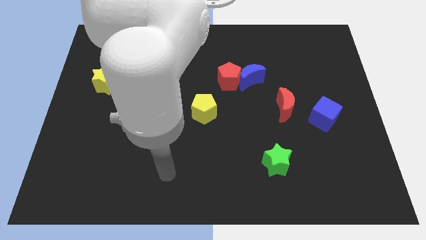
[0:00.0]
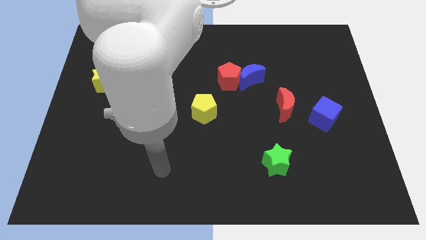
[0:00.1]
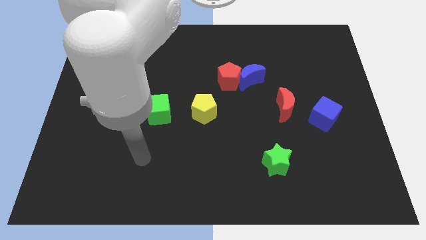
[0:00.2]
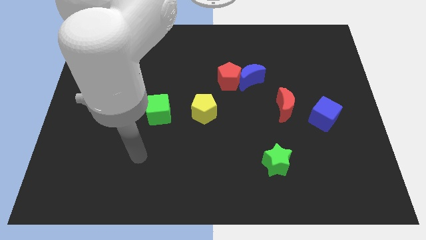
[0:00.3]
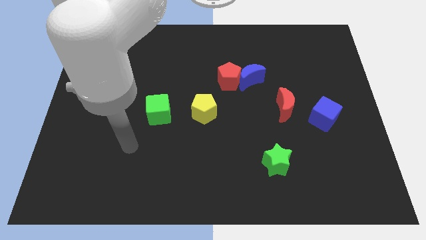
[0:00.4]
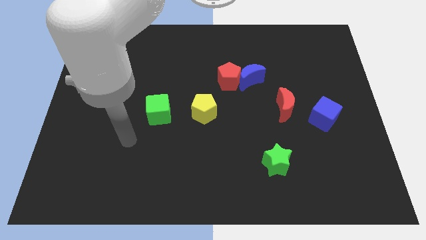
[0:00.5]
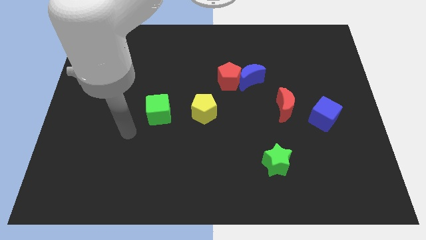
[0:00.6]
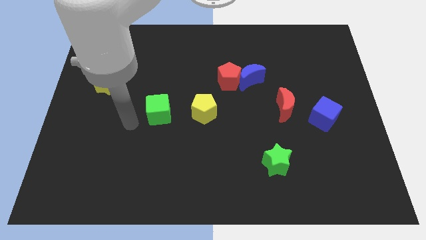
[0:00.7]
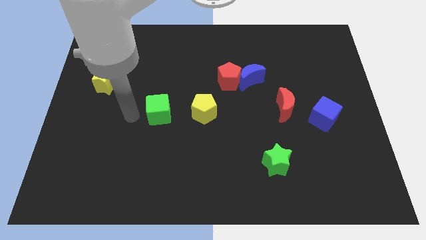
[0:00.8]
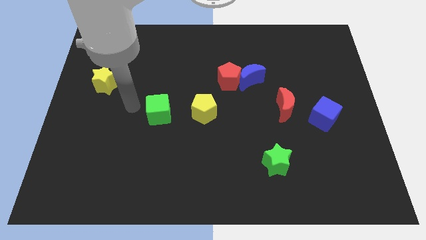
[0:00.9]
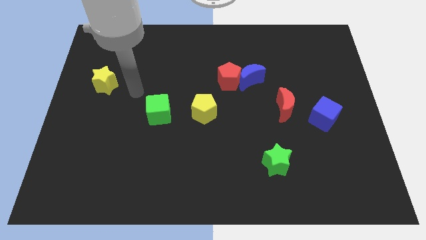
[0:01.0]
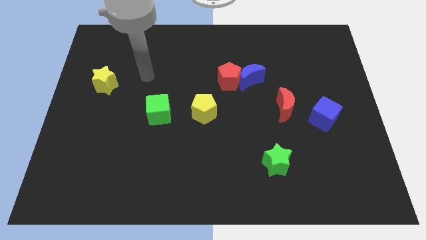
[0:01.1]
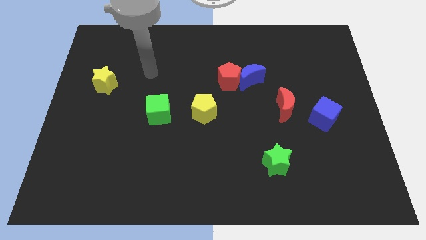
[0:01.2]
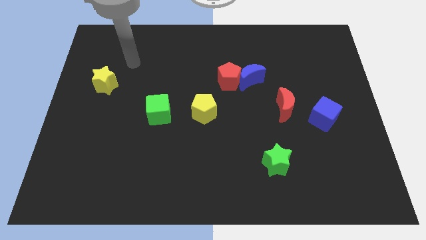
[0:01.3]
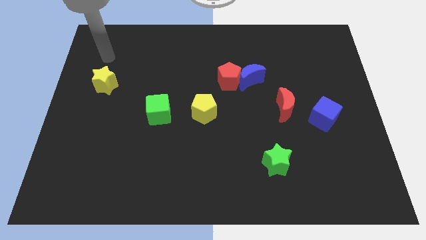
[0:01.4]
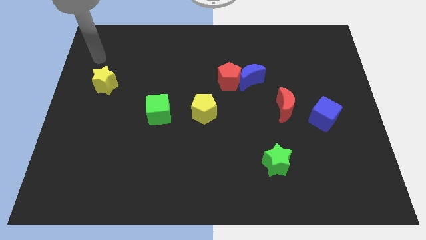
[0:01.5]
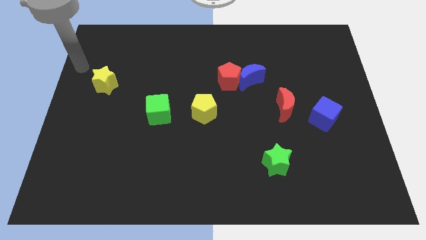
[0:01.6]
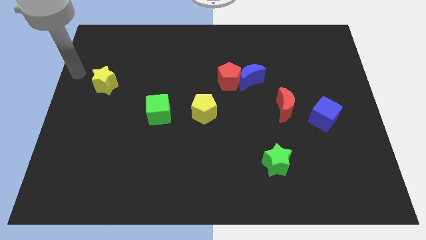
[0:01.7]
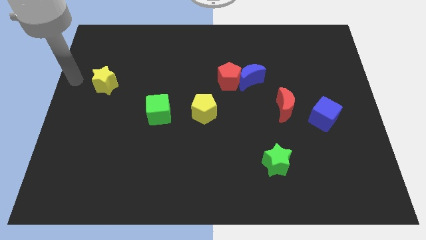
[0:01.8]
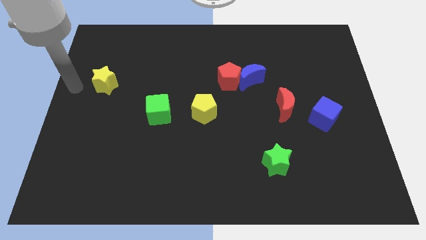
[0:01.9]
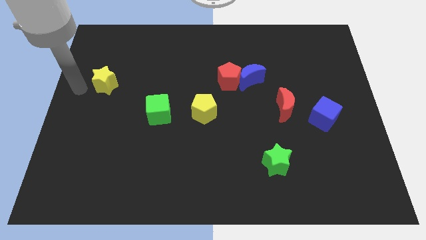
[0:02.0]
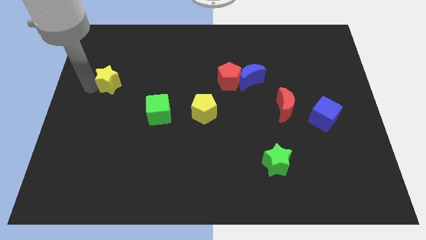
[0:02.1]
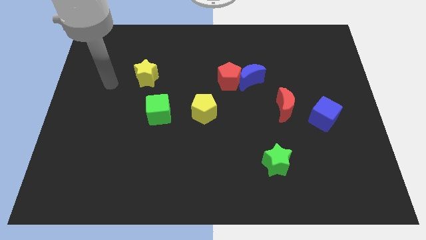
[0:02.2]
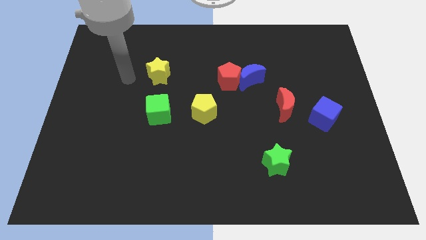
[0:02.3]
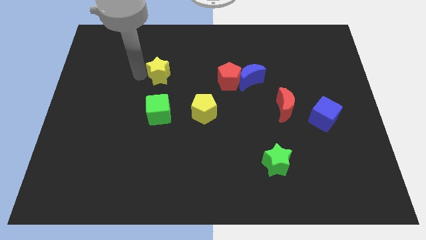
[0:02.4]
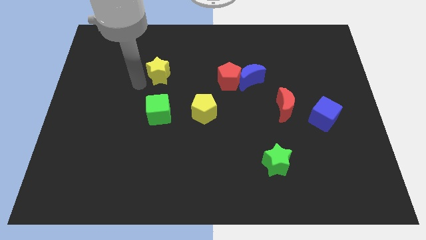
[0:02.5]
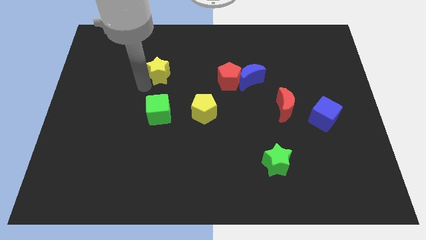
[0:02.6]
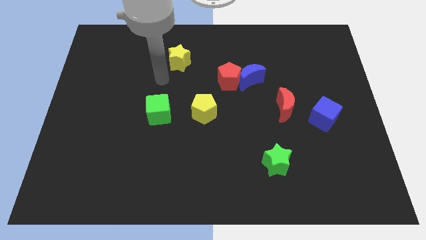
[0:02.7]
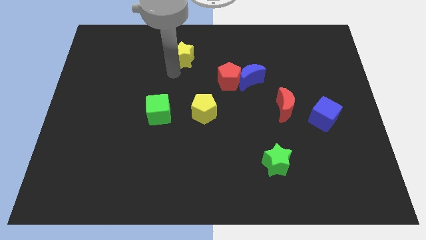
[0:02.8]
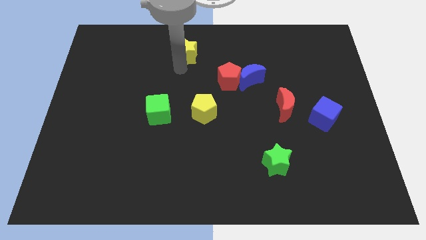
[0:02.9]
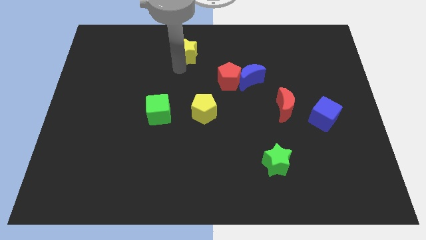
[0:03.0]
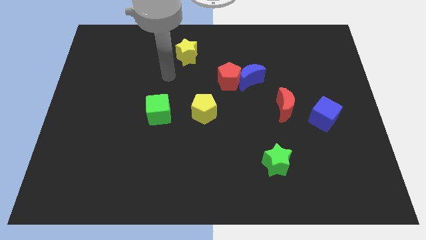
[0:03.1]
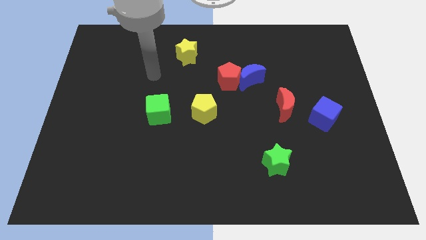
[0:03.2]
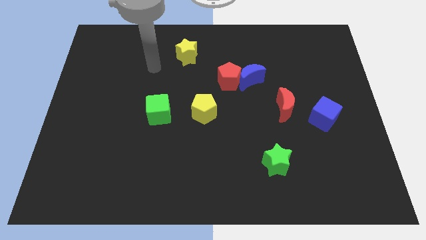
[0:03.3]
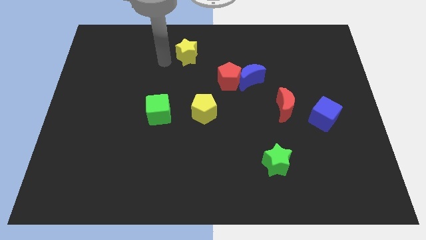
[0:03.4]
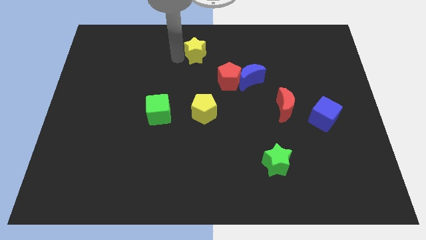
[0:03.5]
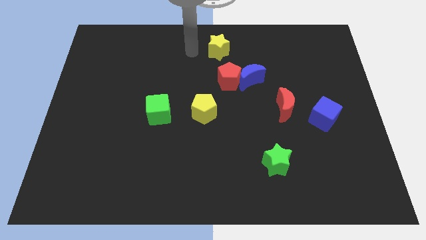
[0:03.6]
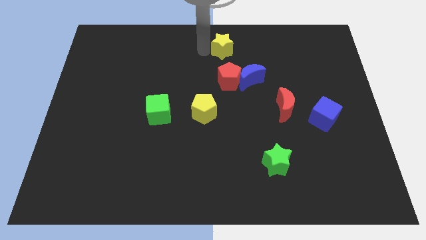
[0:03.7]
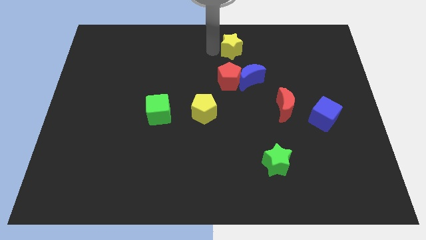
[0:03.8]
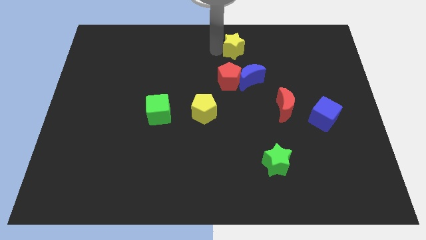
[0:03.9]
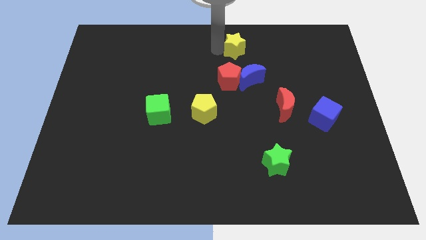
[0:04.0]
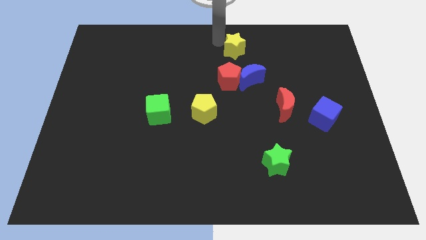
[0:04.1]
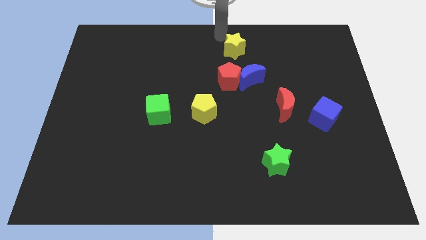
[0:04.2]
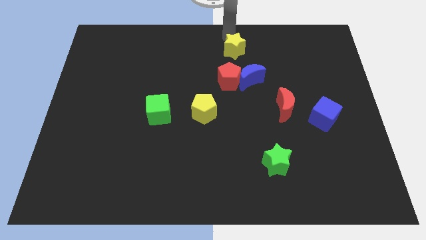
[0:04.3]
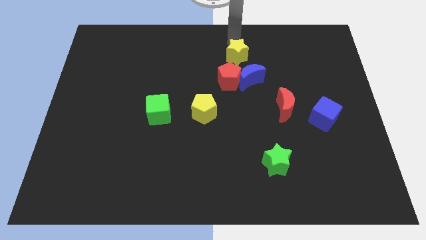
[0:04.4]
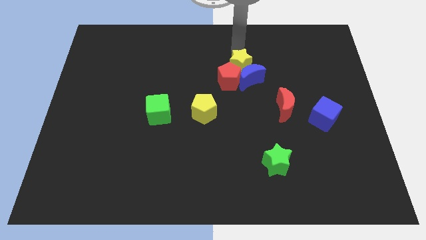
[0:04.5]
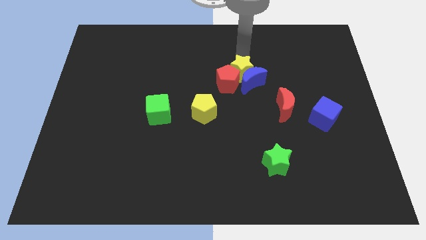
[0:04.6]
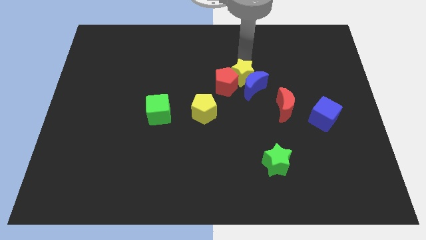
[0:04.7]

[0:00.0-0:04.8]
move the yellow star towards the blue moon

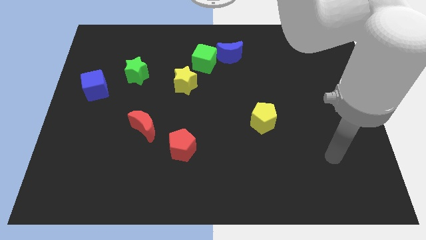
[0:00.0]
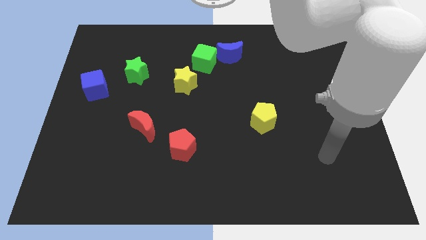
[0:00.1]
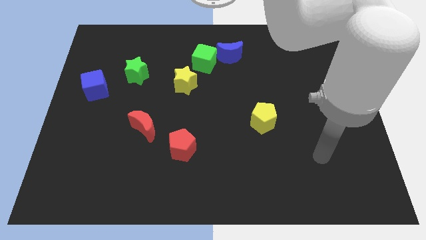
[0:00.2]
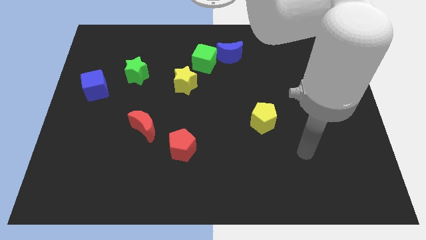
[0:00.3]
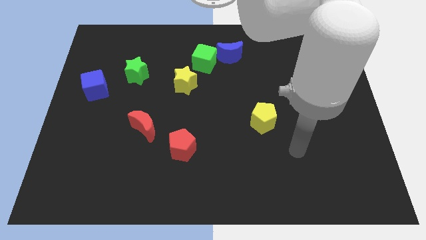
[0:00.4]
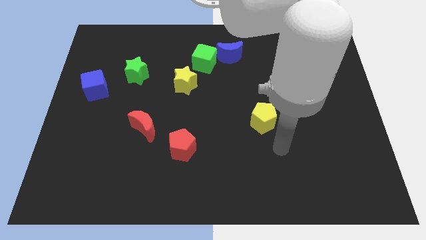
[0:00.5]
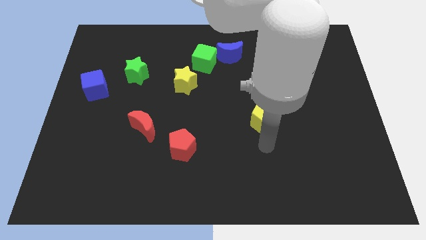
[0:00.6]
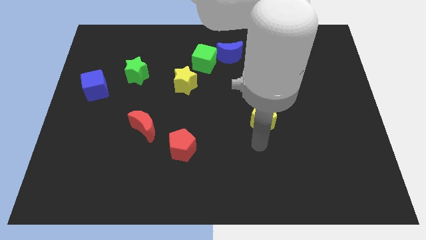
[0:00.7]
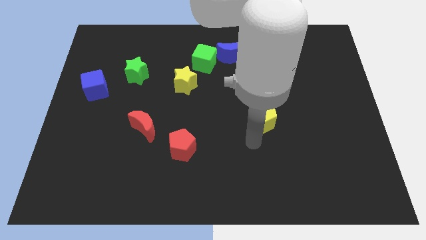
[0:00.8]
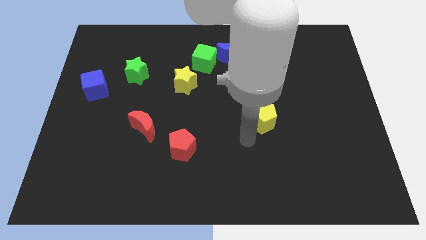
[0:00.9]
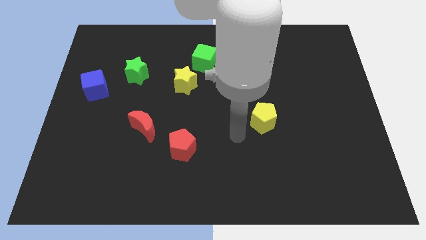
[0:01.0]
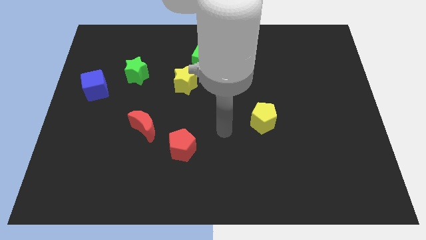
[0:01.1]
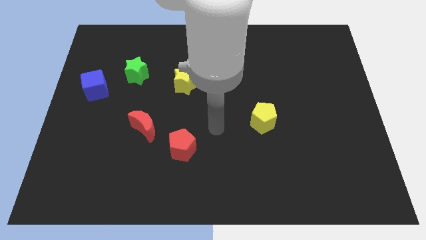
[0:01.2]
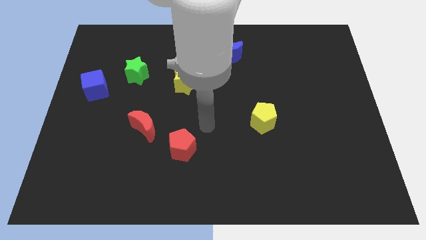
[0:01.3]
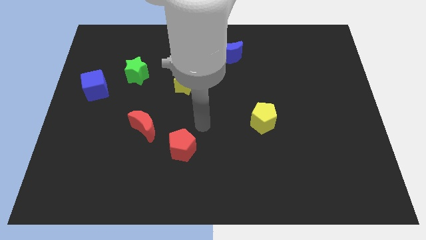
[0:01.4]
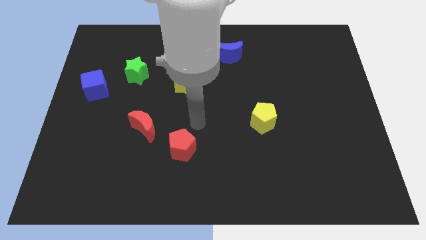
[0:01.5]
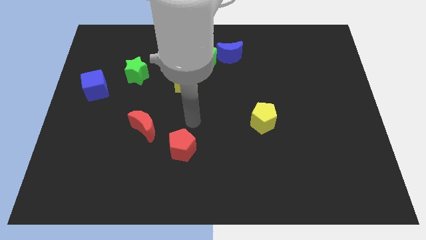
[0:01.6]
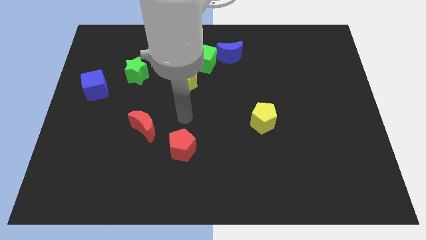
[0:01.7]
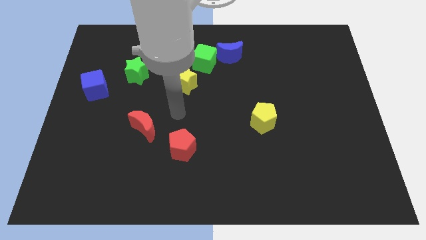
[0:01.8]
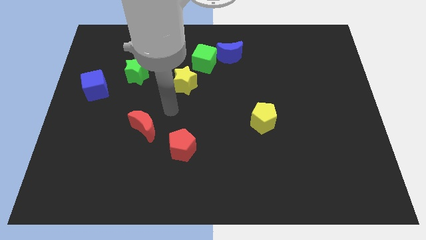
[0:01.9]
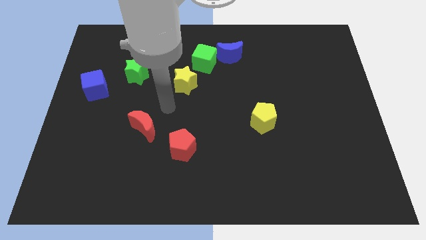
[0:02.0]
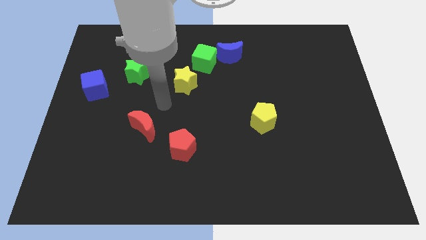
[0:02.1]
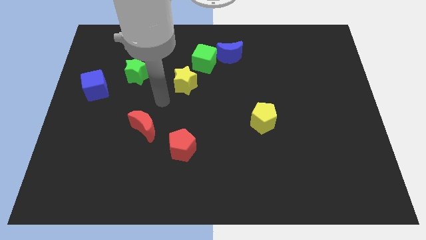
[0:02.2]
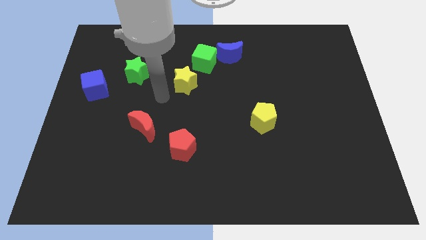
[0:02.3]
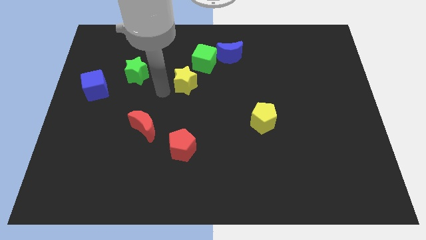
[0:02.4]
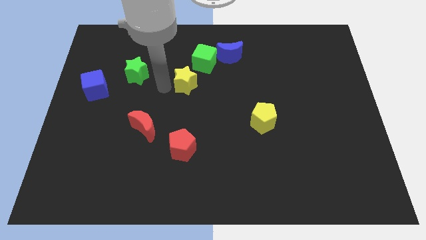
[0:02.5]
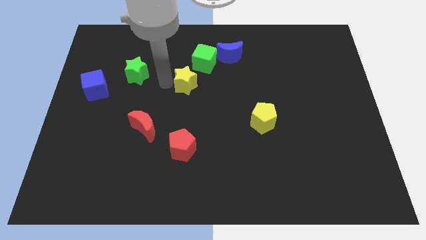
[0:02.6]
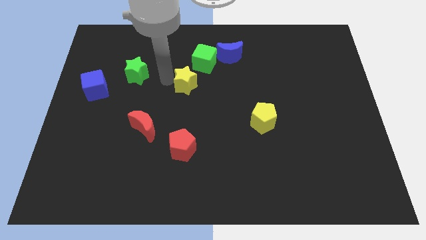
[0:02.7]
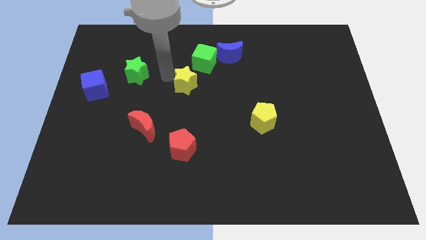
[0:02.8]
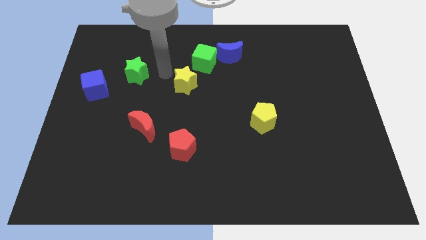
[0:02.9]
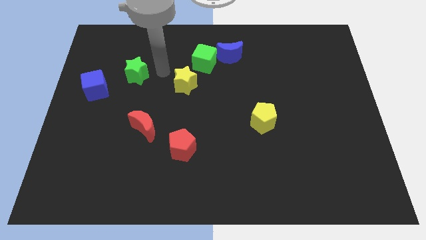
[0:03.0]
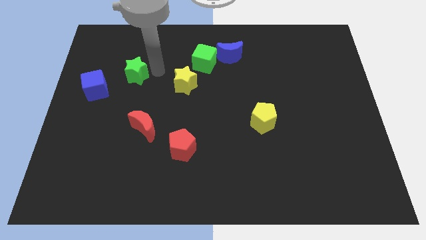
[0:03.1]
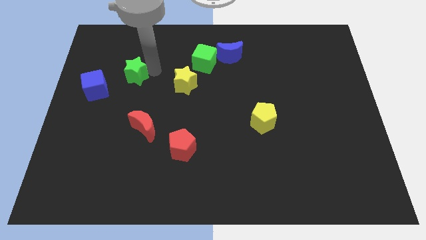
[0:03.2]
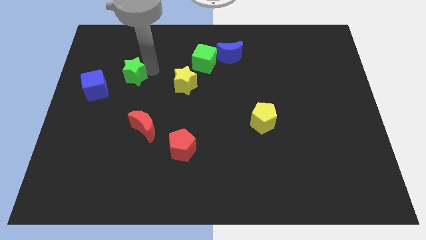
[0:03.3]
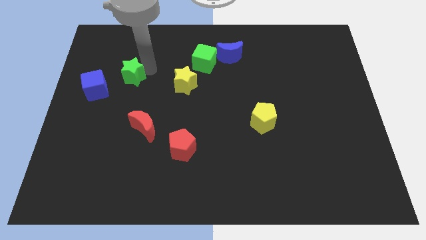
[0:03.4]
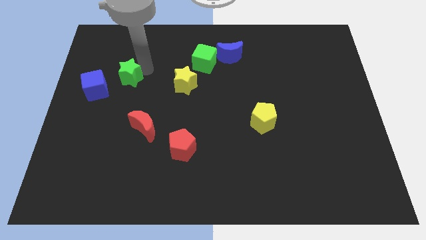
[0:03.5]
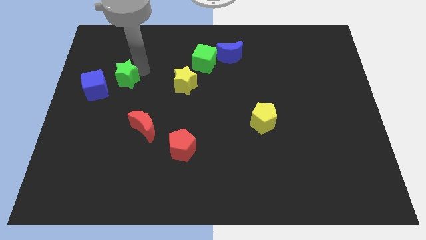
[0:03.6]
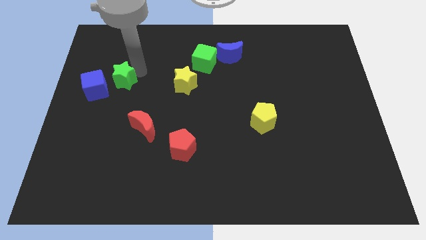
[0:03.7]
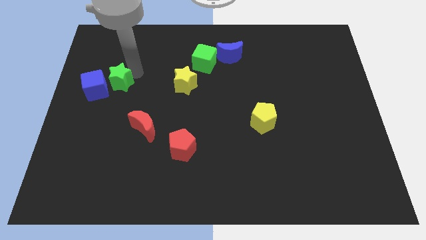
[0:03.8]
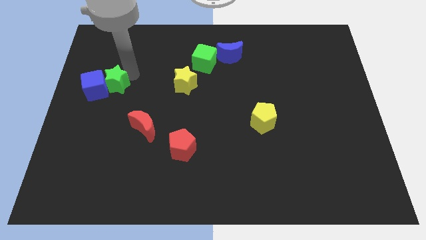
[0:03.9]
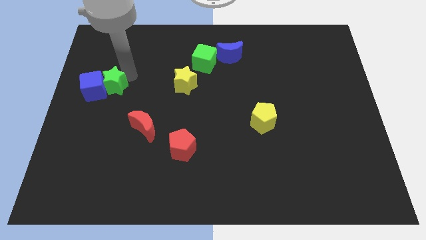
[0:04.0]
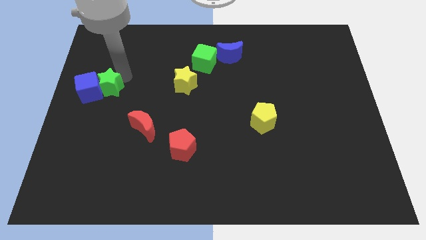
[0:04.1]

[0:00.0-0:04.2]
move the green star close to the blue cube
